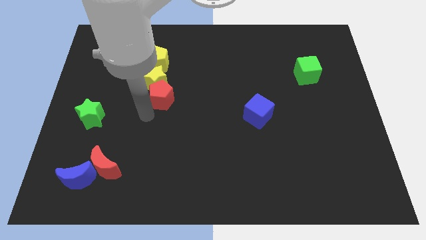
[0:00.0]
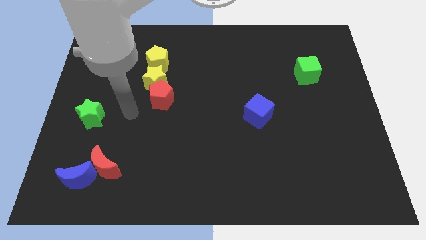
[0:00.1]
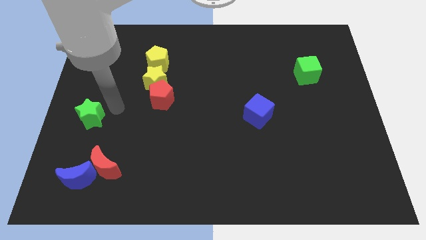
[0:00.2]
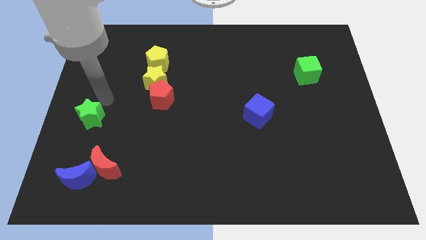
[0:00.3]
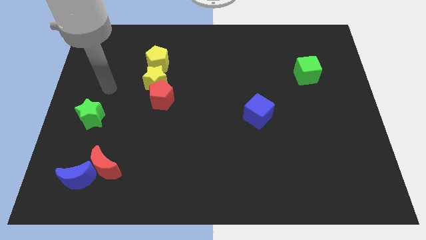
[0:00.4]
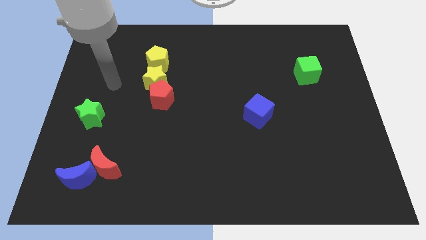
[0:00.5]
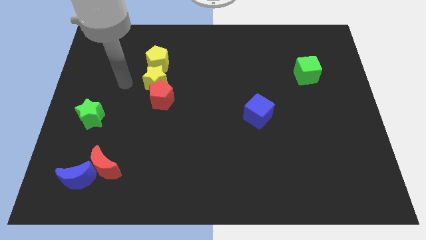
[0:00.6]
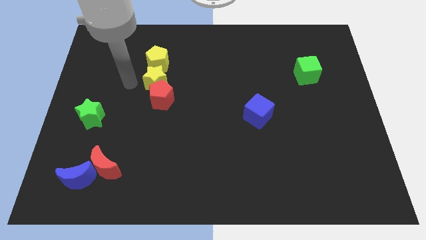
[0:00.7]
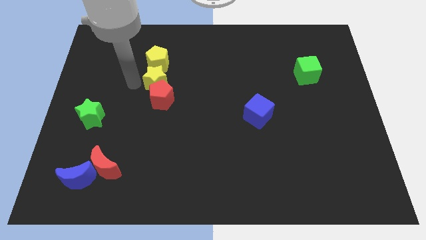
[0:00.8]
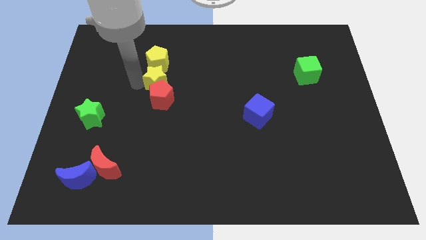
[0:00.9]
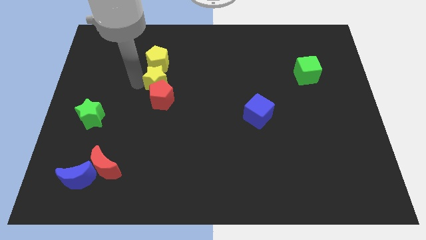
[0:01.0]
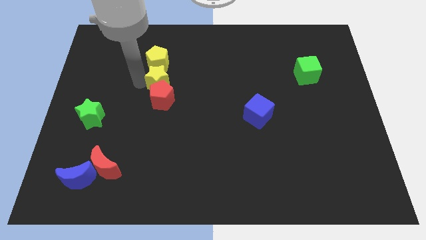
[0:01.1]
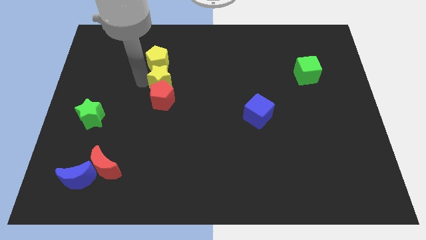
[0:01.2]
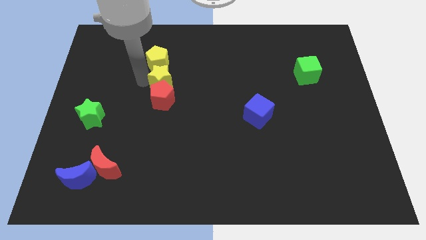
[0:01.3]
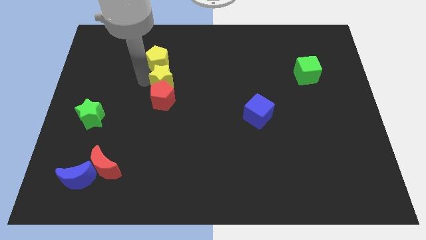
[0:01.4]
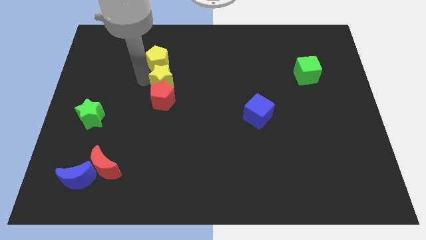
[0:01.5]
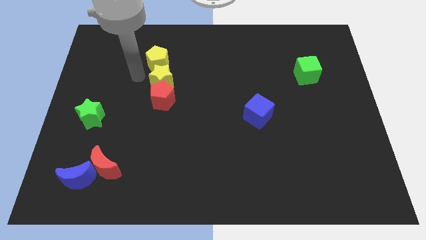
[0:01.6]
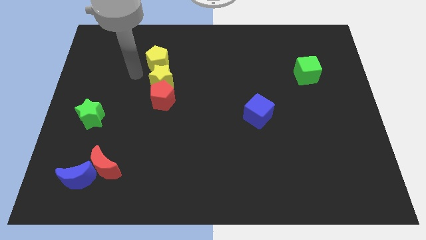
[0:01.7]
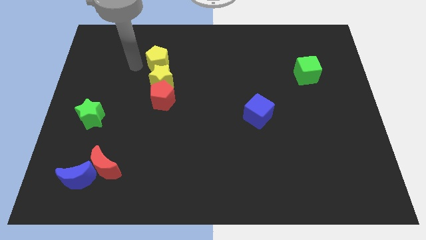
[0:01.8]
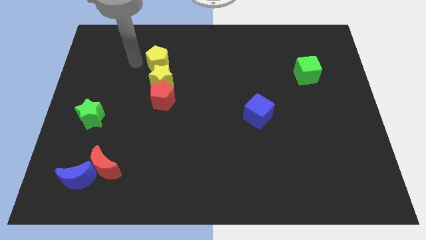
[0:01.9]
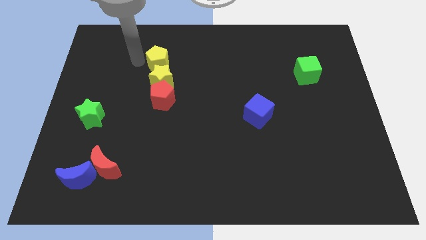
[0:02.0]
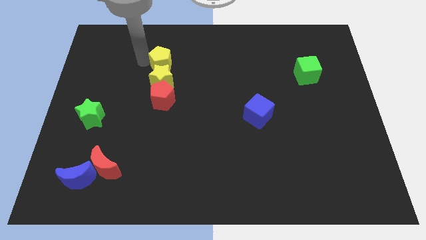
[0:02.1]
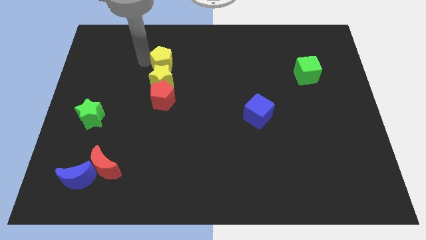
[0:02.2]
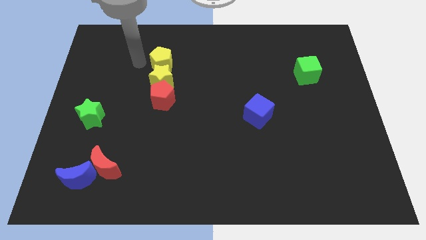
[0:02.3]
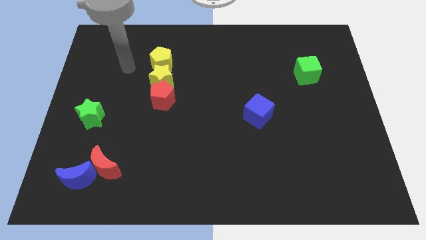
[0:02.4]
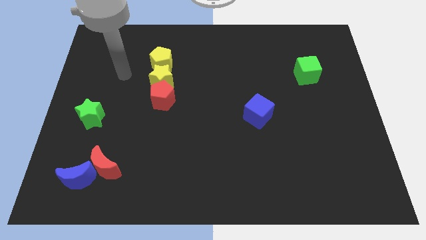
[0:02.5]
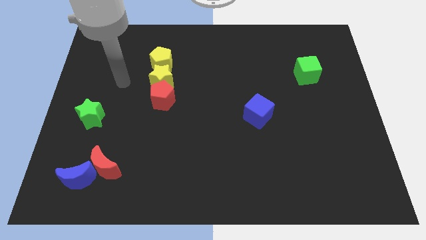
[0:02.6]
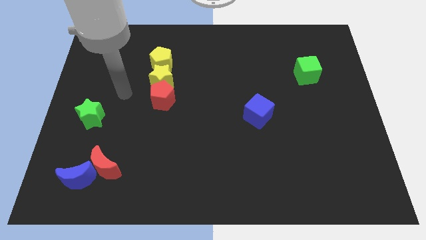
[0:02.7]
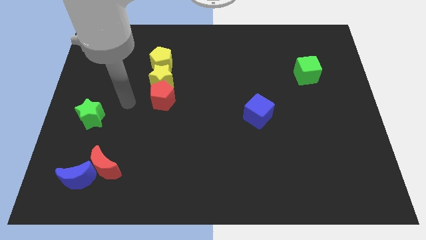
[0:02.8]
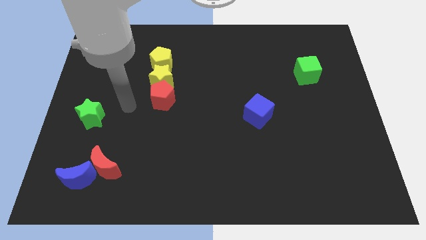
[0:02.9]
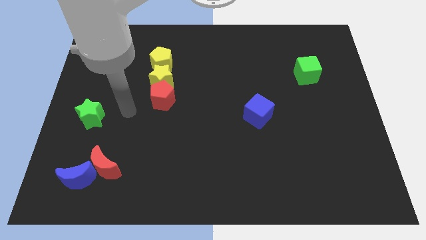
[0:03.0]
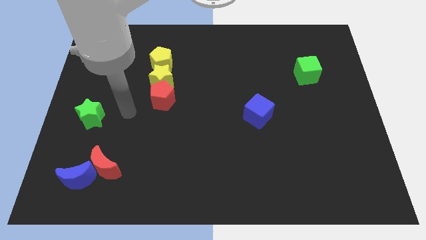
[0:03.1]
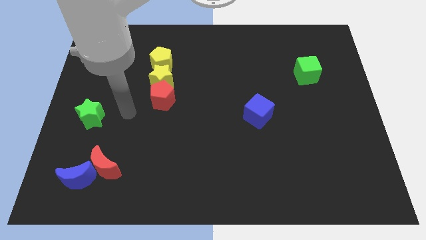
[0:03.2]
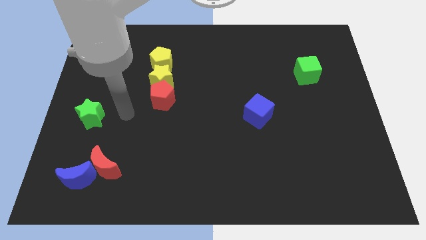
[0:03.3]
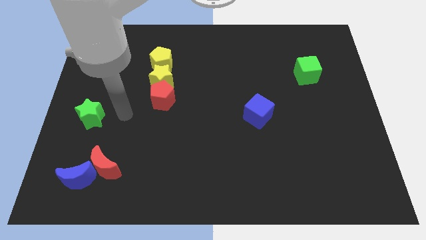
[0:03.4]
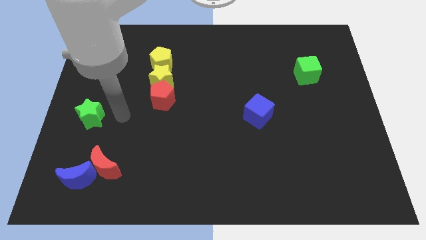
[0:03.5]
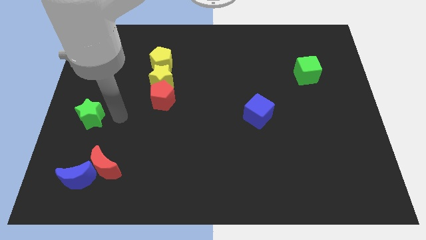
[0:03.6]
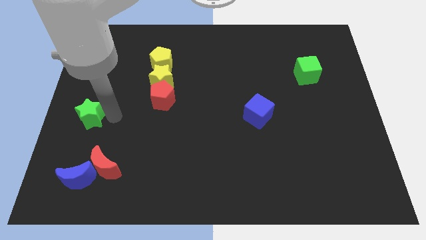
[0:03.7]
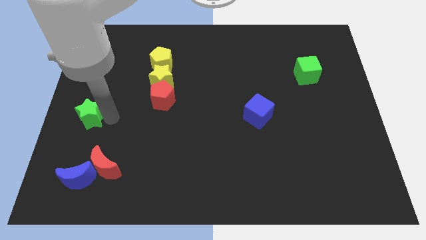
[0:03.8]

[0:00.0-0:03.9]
adjust the both yellow blocks at the top side of the red pentagon to form a vertical line

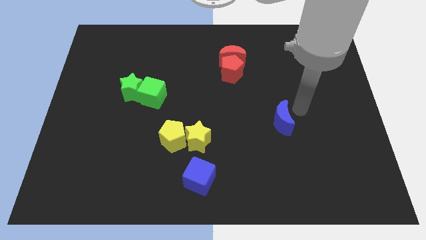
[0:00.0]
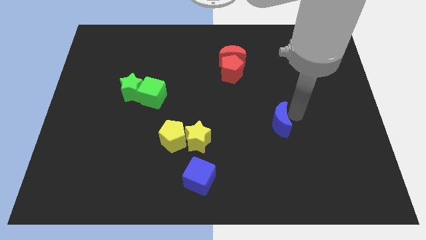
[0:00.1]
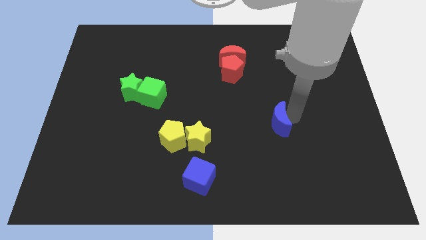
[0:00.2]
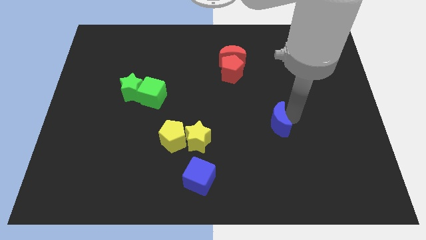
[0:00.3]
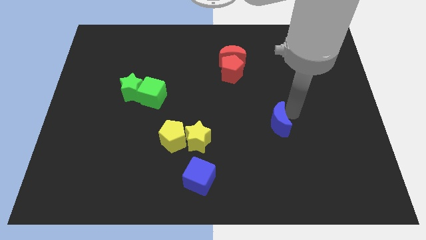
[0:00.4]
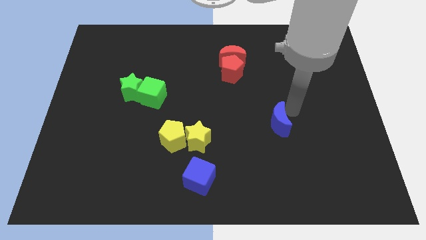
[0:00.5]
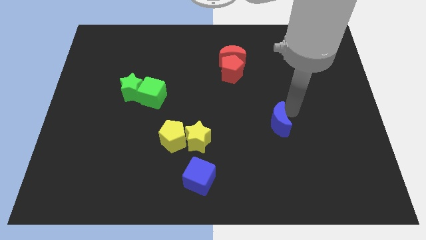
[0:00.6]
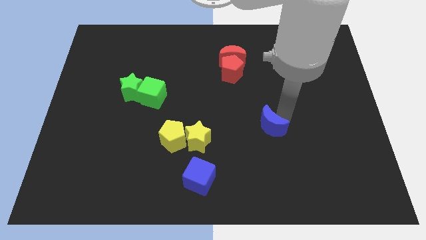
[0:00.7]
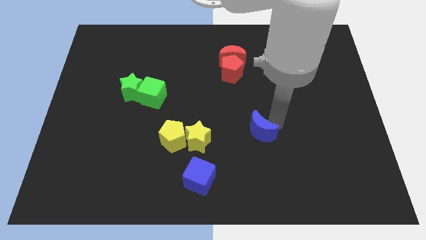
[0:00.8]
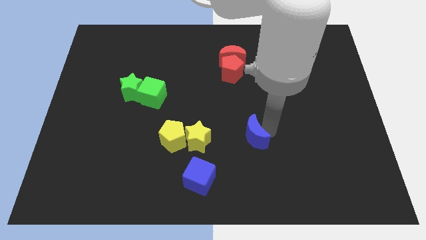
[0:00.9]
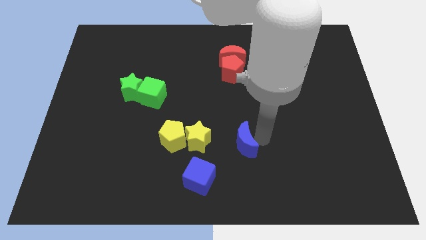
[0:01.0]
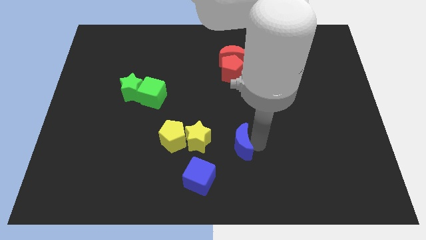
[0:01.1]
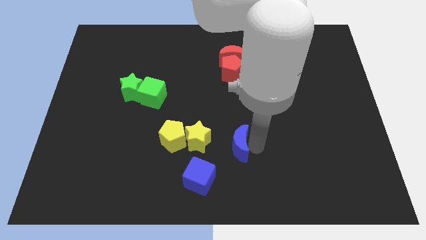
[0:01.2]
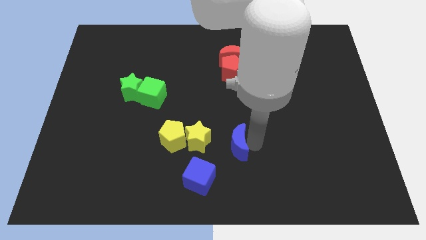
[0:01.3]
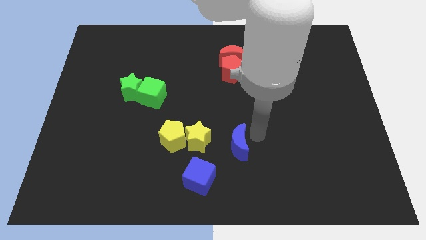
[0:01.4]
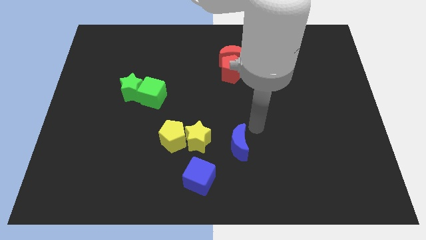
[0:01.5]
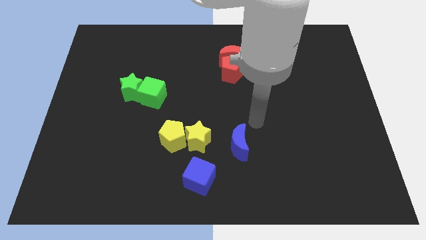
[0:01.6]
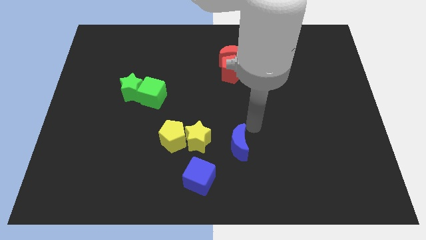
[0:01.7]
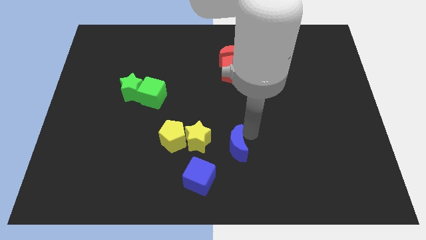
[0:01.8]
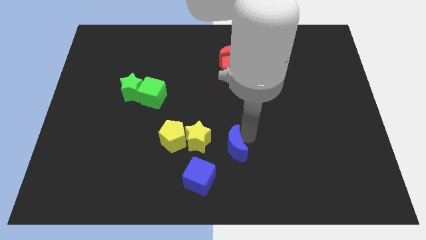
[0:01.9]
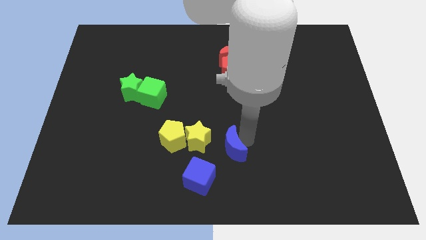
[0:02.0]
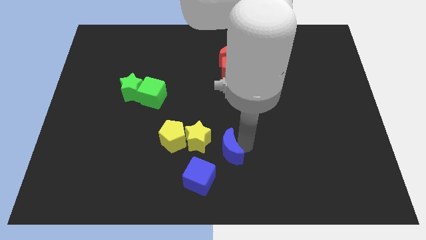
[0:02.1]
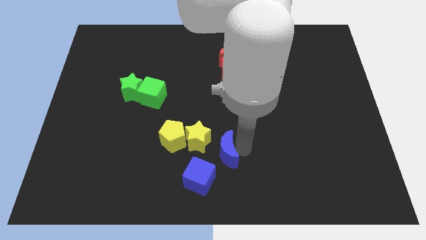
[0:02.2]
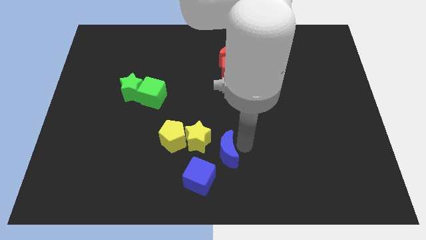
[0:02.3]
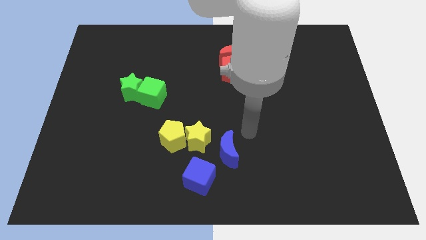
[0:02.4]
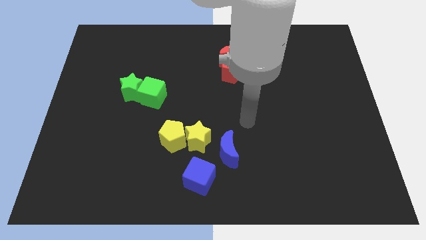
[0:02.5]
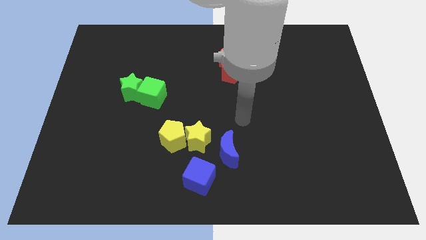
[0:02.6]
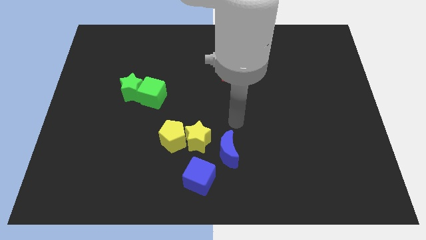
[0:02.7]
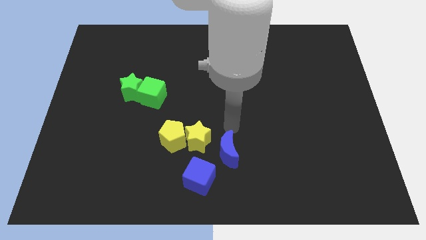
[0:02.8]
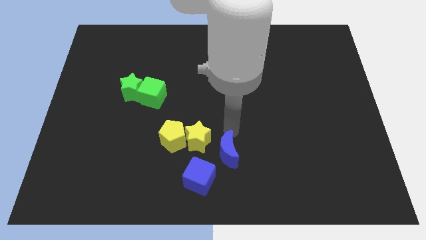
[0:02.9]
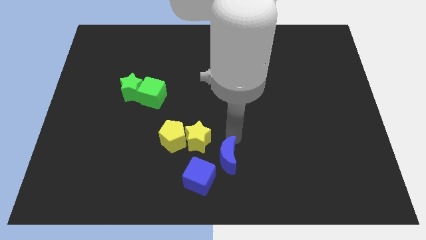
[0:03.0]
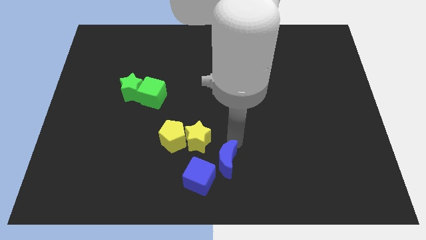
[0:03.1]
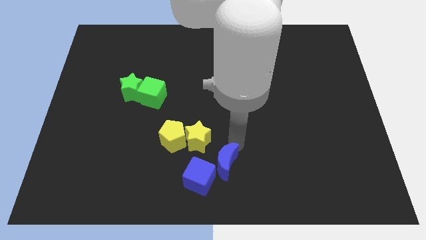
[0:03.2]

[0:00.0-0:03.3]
push the blue crescent to the top right side of the blue cube

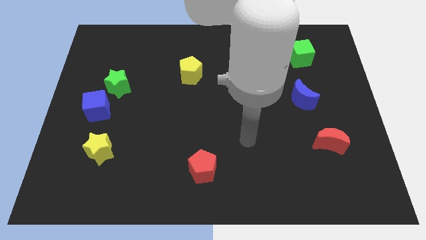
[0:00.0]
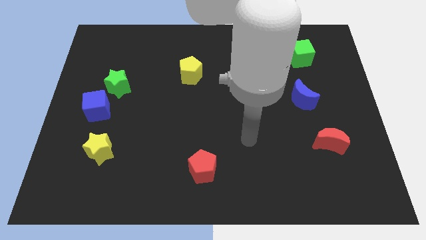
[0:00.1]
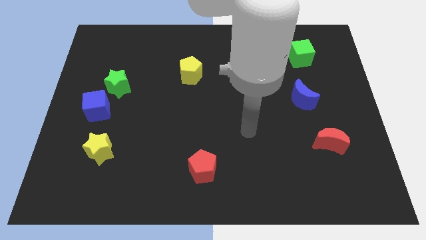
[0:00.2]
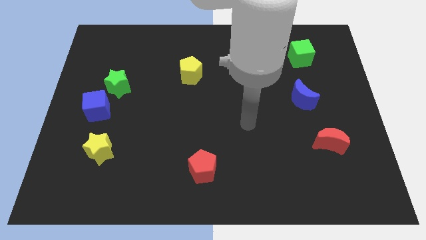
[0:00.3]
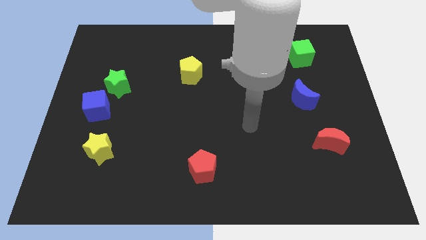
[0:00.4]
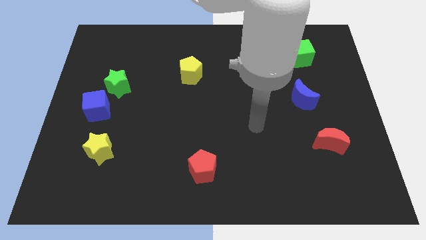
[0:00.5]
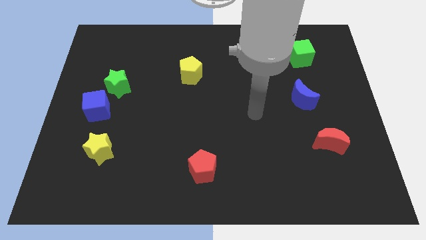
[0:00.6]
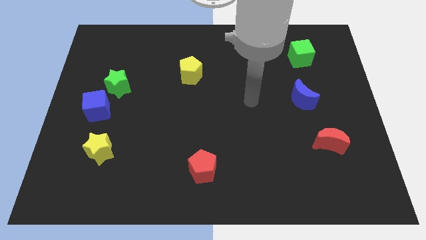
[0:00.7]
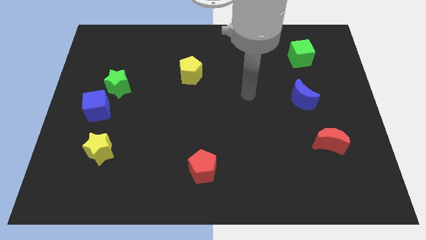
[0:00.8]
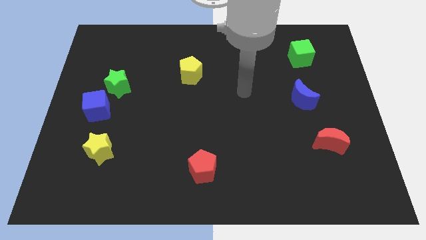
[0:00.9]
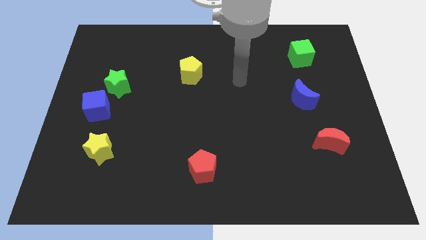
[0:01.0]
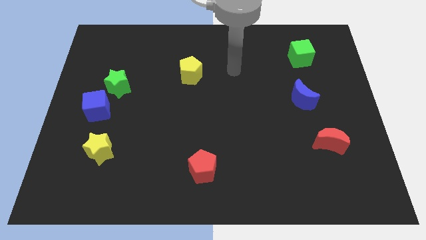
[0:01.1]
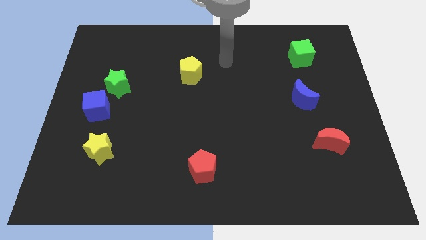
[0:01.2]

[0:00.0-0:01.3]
point your hand at the right side of the yellow pentagon

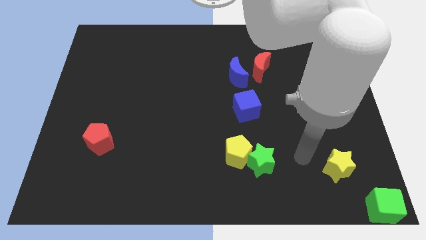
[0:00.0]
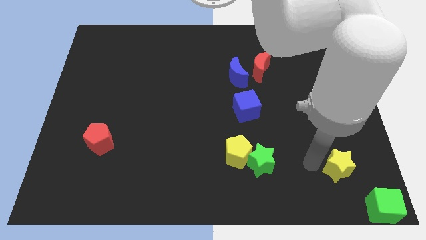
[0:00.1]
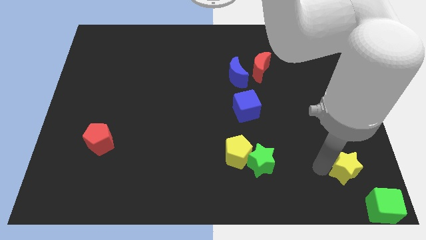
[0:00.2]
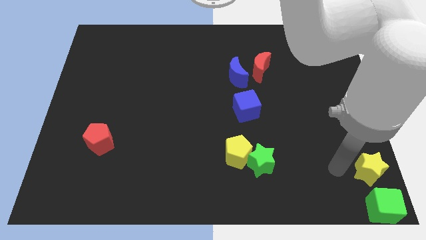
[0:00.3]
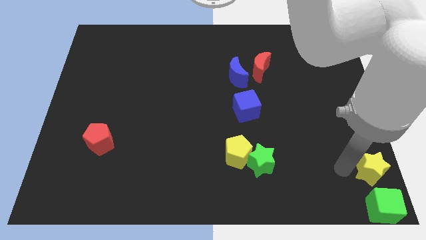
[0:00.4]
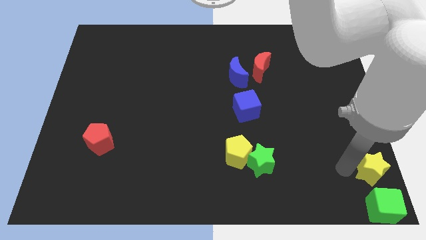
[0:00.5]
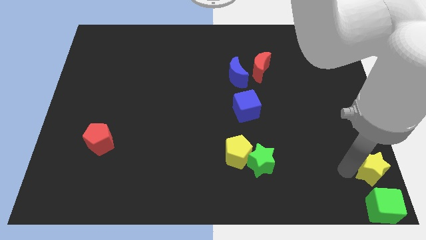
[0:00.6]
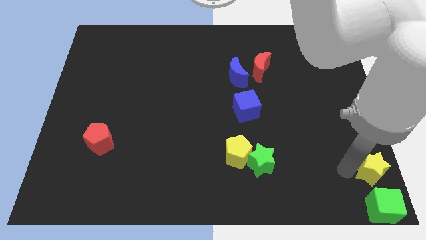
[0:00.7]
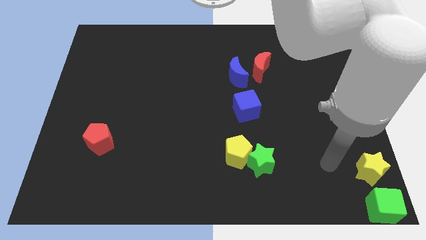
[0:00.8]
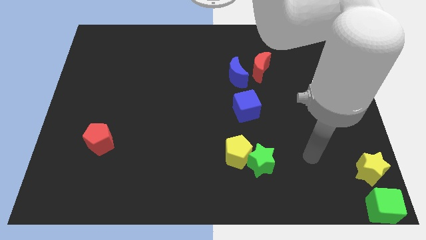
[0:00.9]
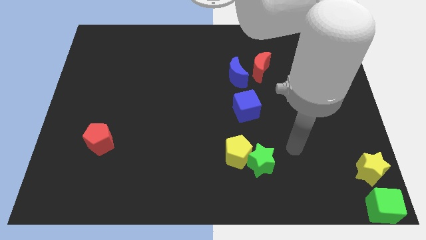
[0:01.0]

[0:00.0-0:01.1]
put the yellow star at the top of green cube
